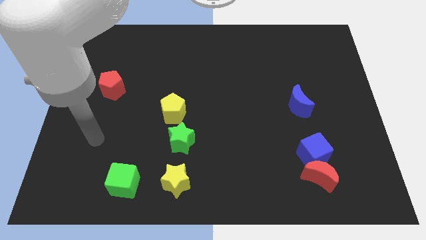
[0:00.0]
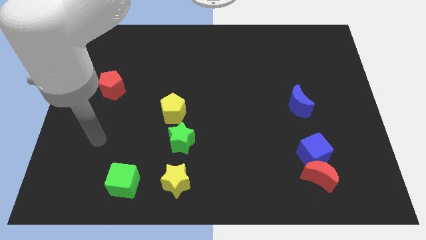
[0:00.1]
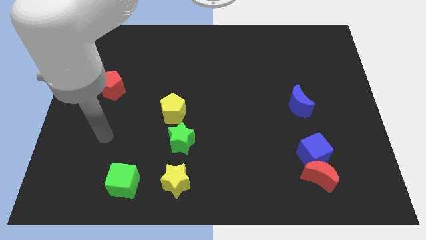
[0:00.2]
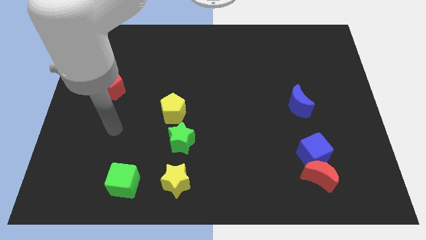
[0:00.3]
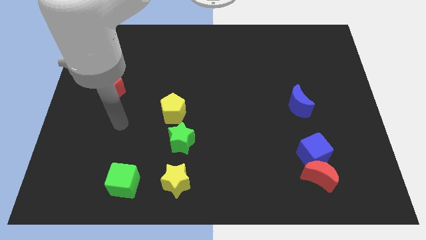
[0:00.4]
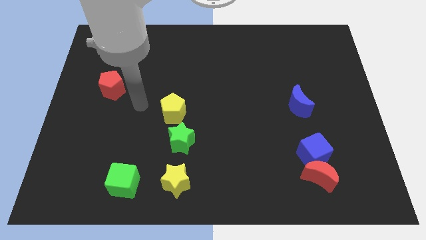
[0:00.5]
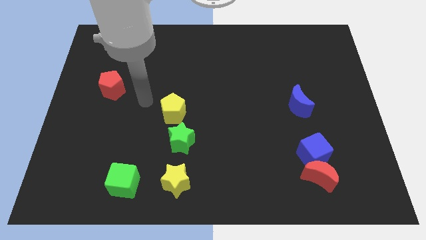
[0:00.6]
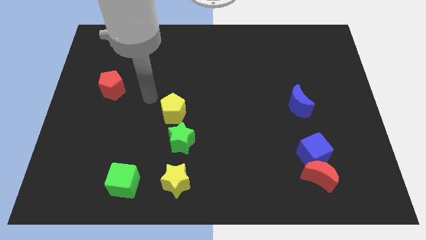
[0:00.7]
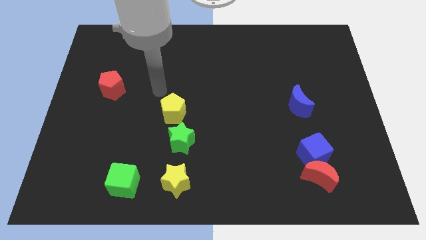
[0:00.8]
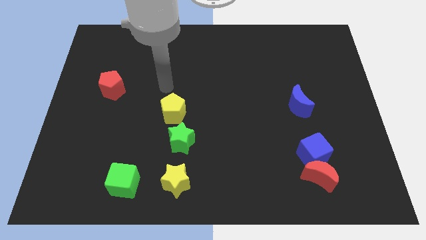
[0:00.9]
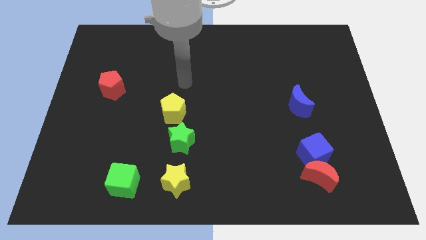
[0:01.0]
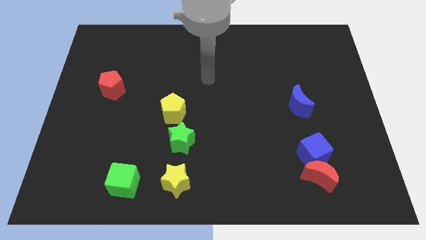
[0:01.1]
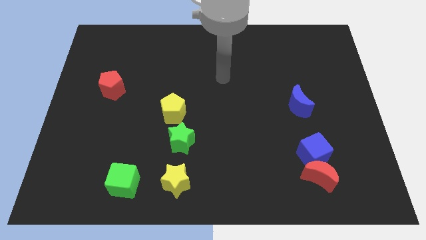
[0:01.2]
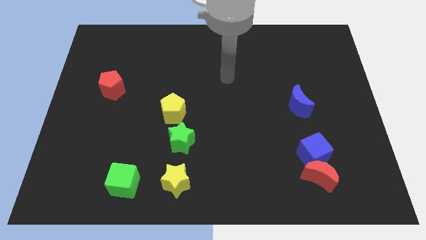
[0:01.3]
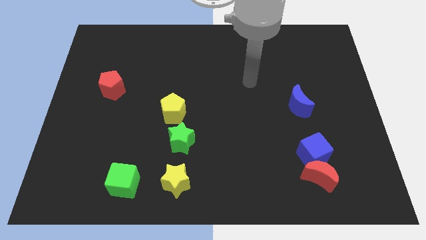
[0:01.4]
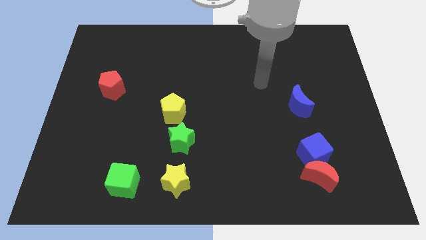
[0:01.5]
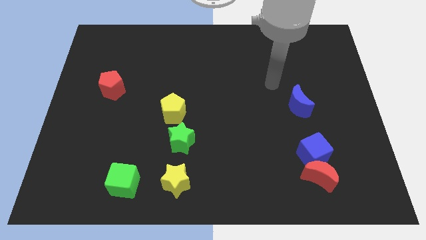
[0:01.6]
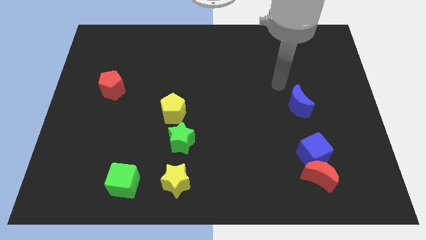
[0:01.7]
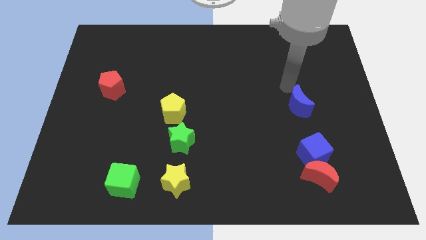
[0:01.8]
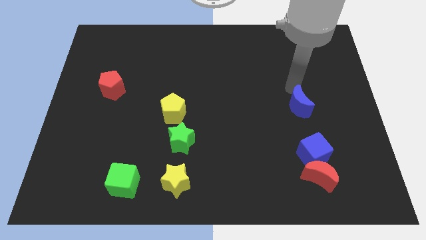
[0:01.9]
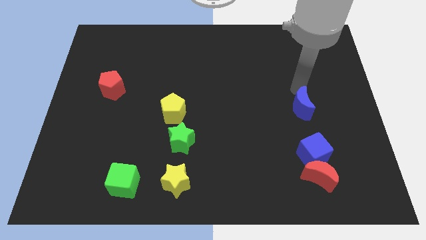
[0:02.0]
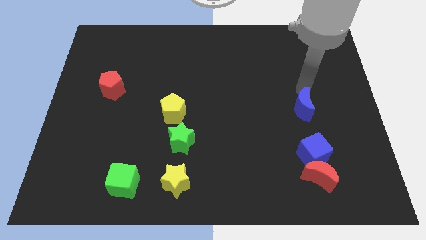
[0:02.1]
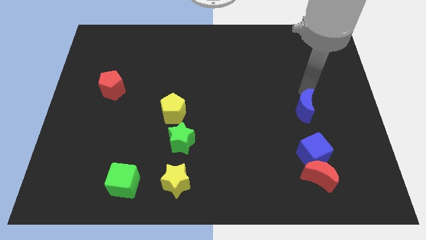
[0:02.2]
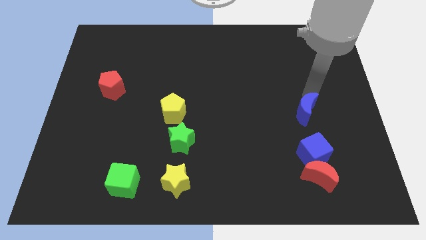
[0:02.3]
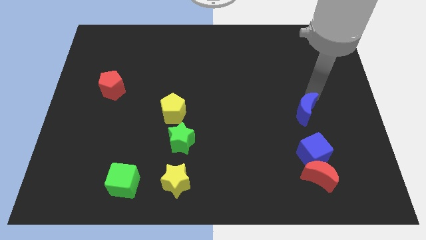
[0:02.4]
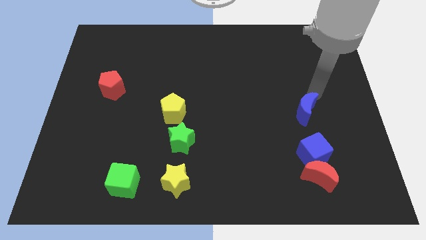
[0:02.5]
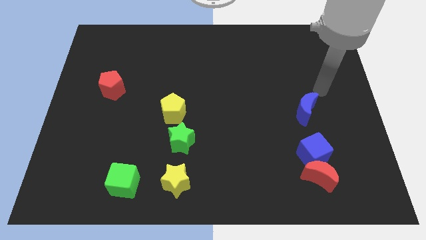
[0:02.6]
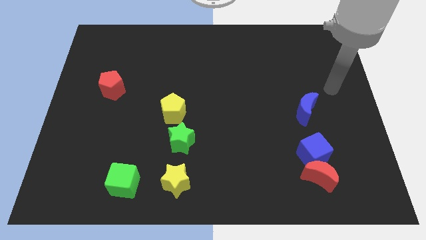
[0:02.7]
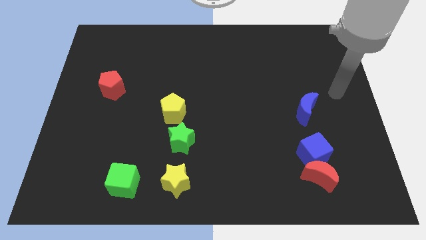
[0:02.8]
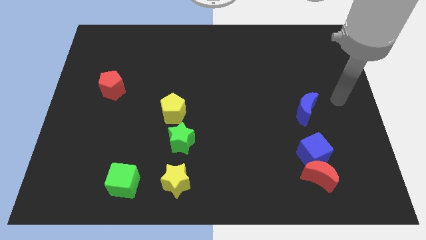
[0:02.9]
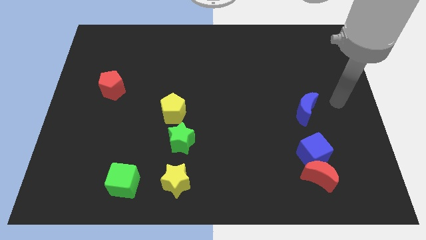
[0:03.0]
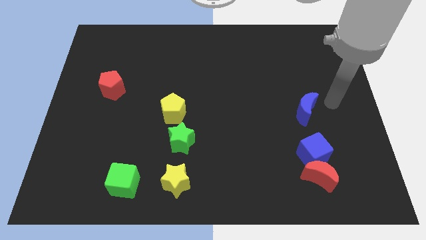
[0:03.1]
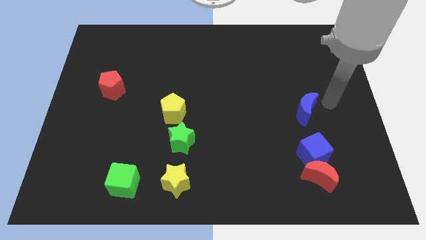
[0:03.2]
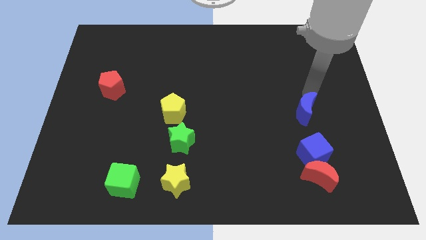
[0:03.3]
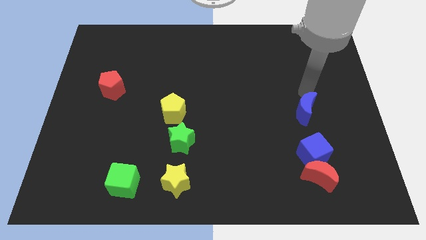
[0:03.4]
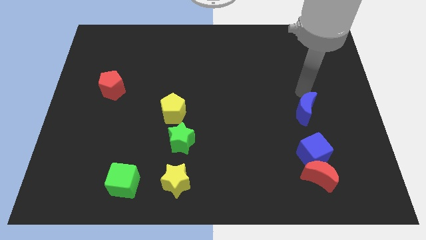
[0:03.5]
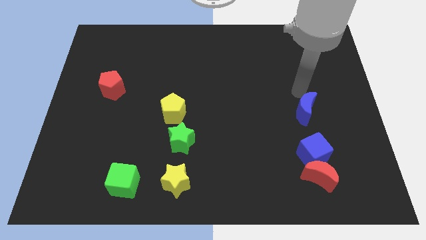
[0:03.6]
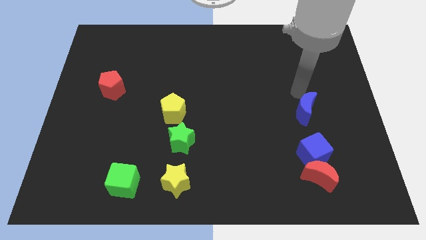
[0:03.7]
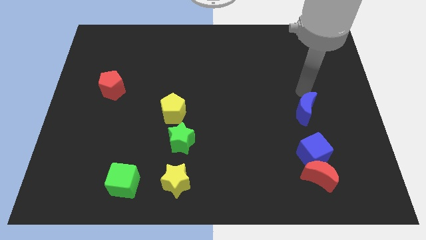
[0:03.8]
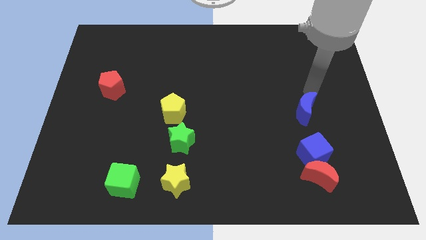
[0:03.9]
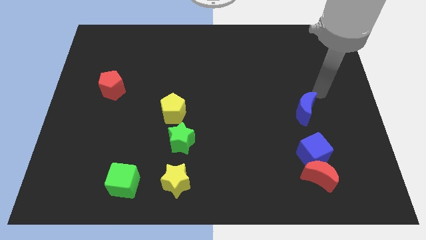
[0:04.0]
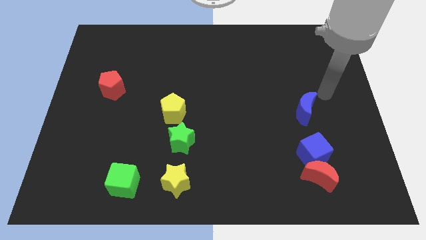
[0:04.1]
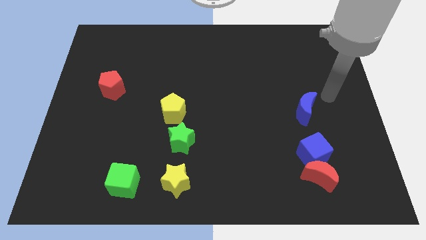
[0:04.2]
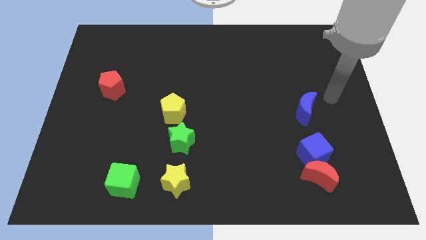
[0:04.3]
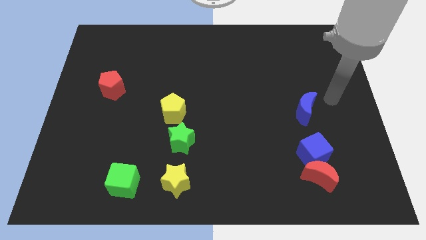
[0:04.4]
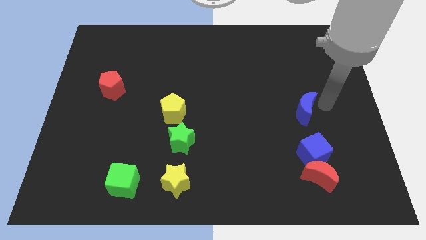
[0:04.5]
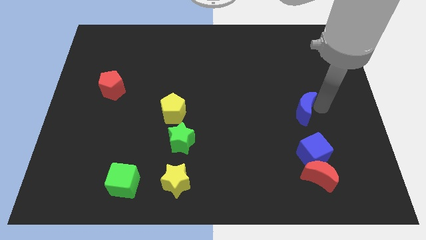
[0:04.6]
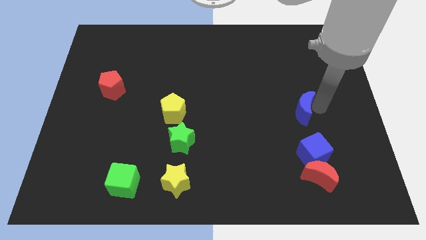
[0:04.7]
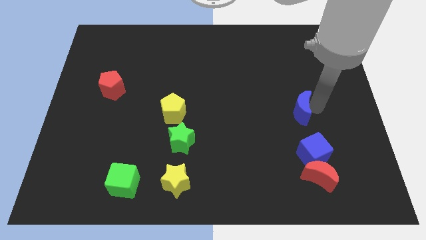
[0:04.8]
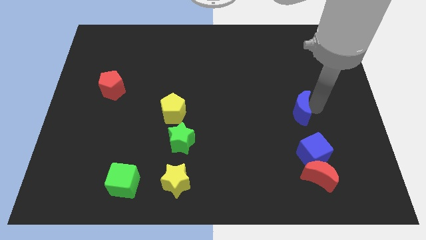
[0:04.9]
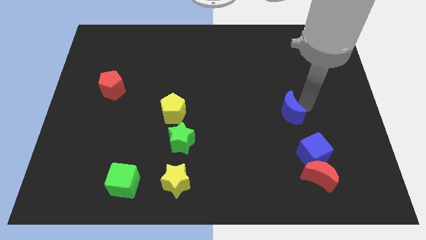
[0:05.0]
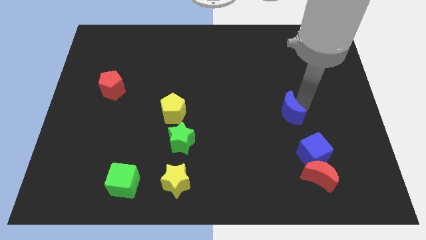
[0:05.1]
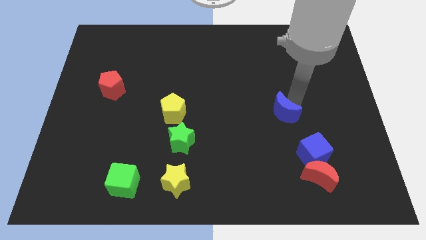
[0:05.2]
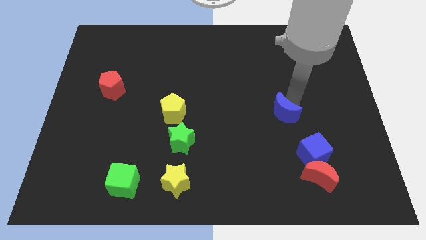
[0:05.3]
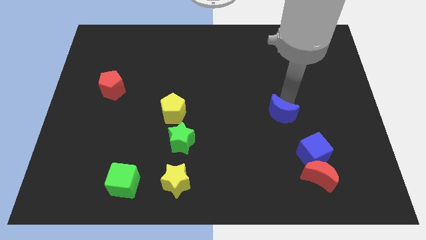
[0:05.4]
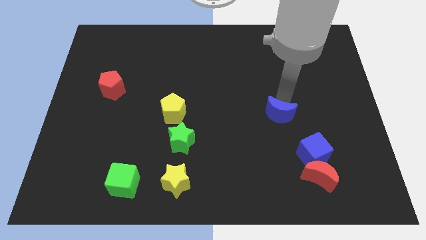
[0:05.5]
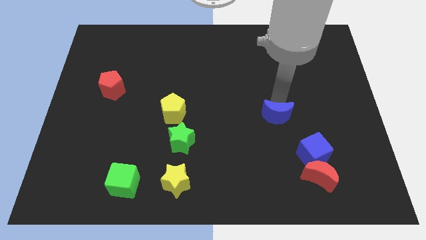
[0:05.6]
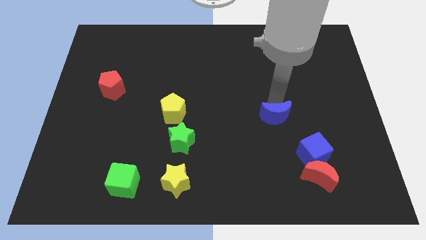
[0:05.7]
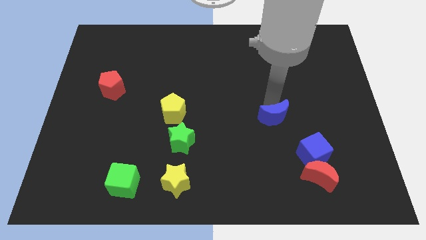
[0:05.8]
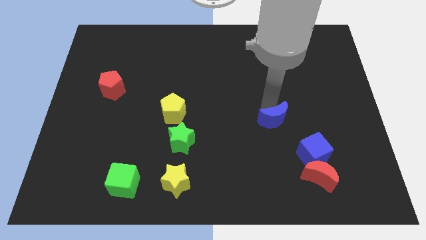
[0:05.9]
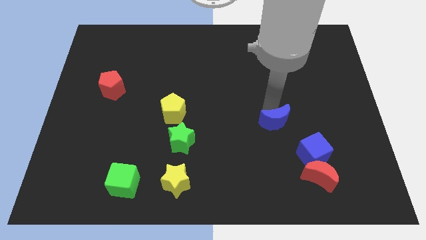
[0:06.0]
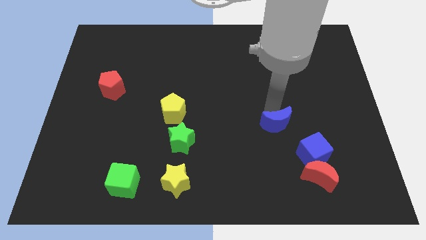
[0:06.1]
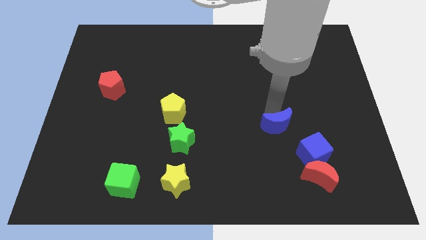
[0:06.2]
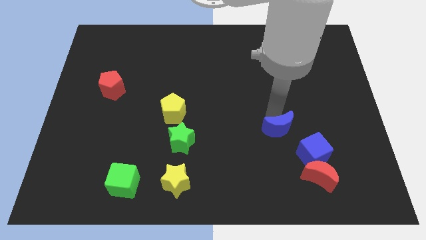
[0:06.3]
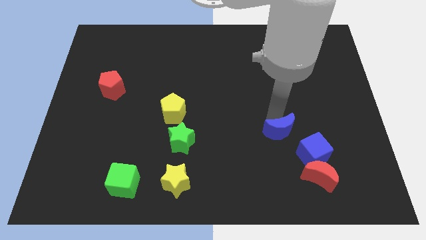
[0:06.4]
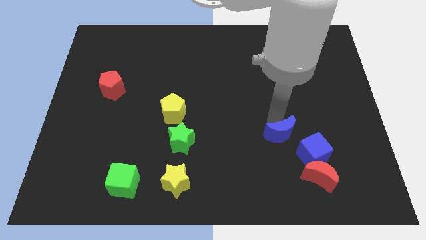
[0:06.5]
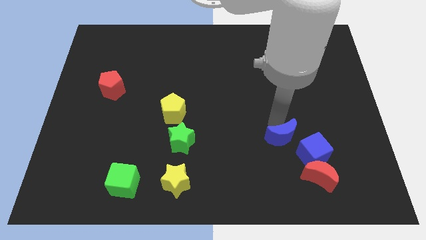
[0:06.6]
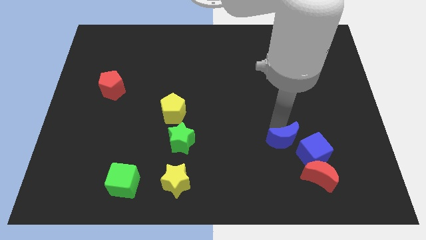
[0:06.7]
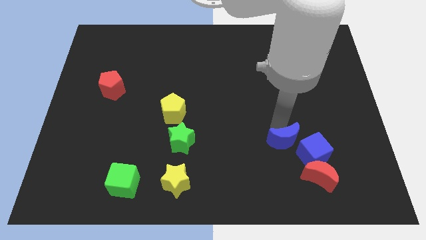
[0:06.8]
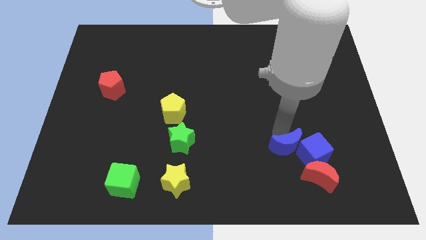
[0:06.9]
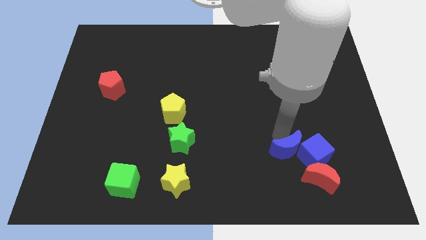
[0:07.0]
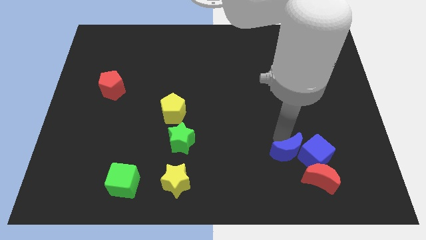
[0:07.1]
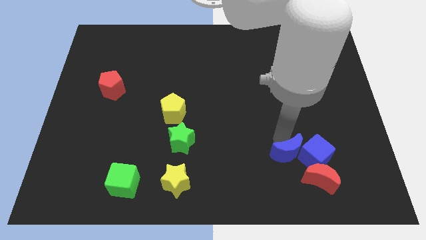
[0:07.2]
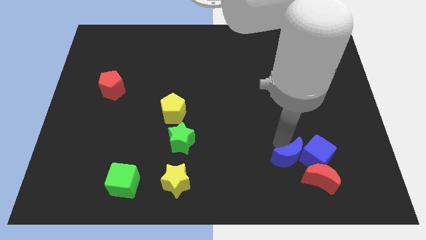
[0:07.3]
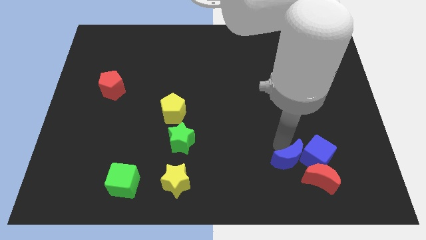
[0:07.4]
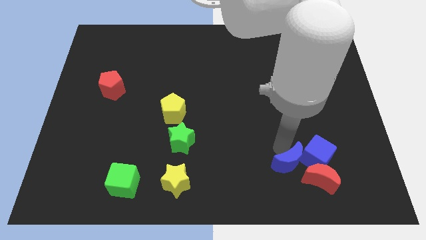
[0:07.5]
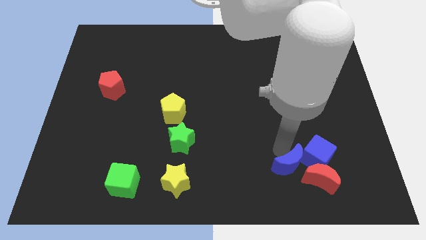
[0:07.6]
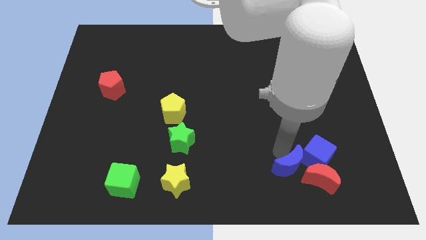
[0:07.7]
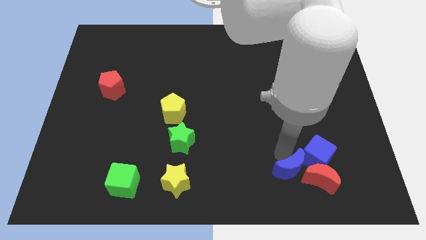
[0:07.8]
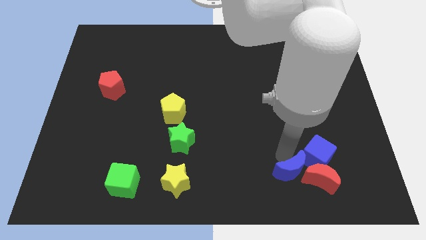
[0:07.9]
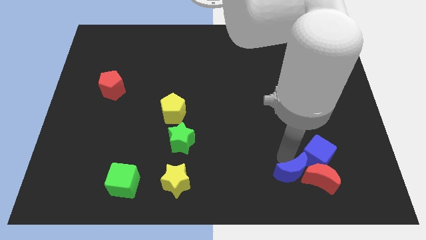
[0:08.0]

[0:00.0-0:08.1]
slide the blue moon next to the red moon

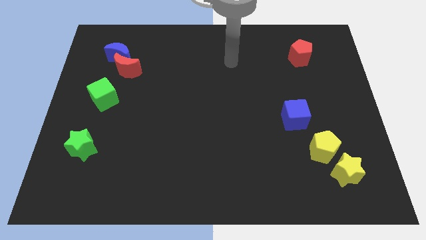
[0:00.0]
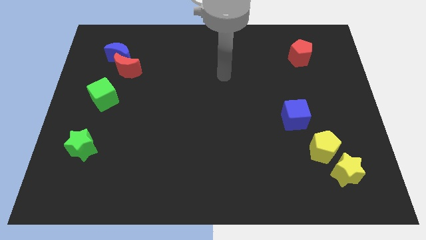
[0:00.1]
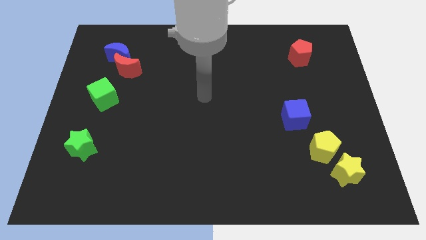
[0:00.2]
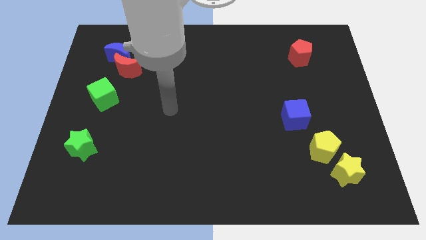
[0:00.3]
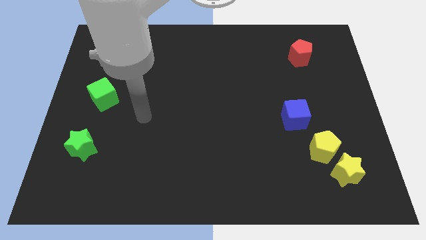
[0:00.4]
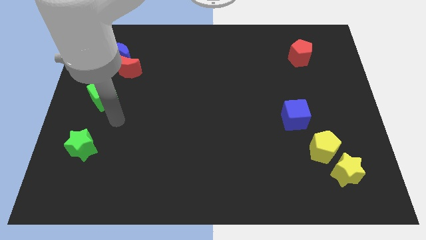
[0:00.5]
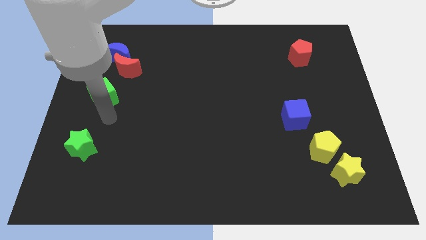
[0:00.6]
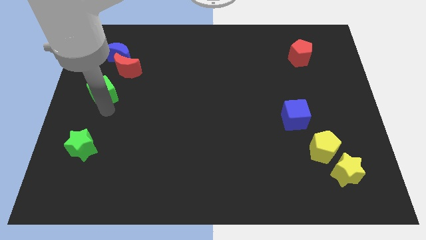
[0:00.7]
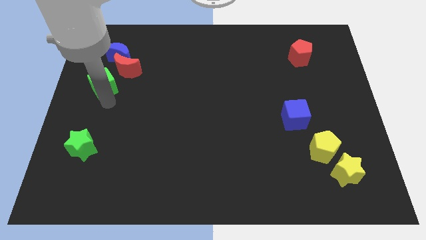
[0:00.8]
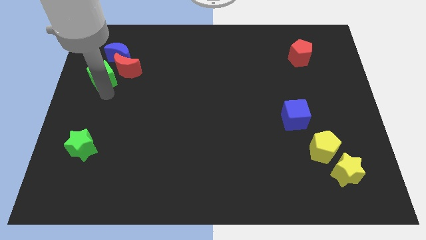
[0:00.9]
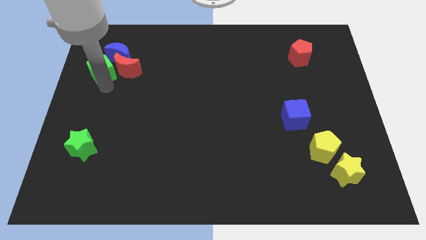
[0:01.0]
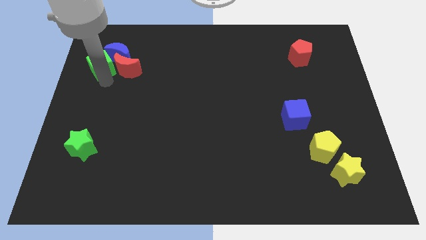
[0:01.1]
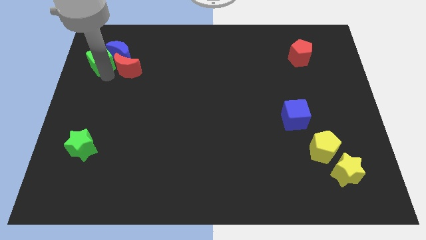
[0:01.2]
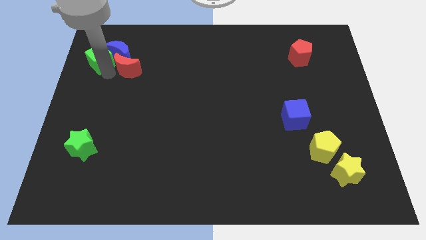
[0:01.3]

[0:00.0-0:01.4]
put the green cube towards the blue moon
